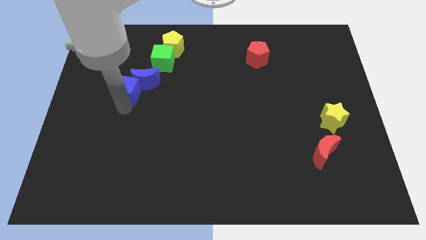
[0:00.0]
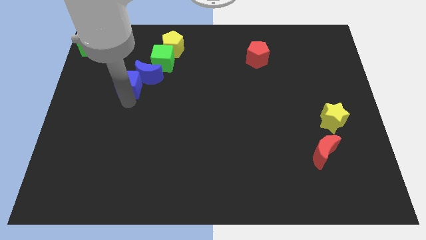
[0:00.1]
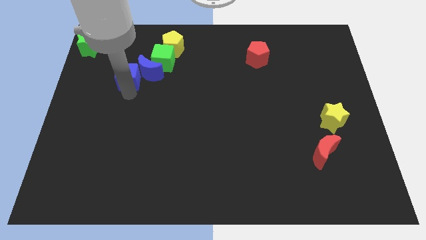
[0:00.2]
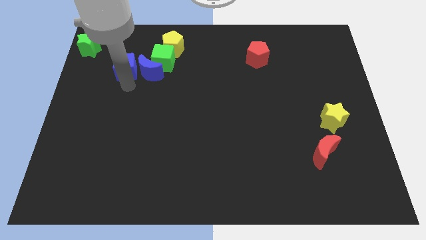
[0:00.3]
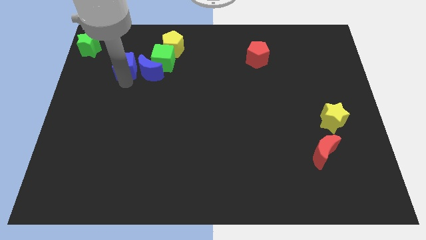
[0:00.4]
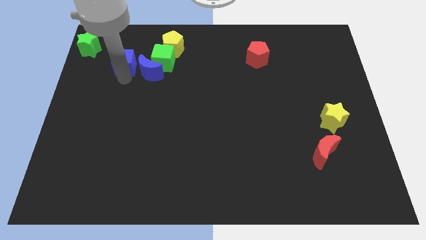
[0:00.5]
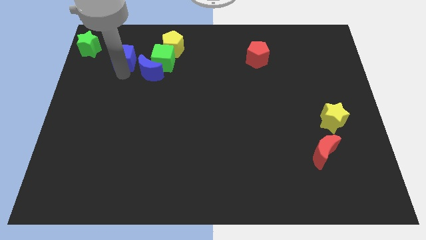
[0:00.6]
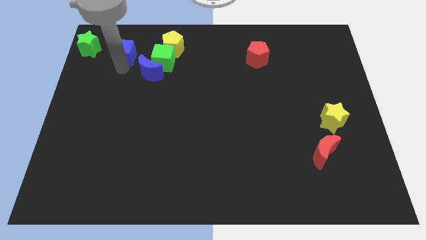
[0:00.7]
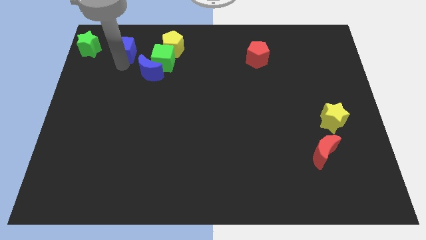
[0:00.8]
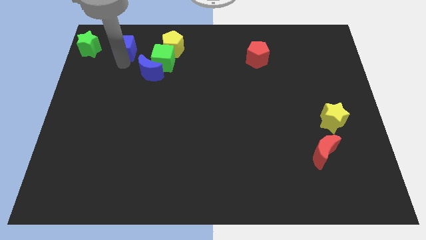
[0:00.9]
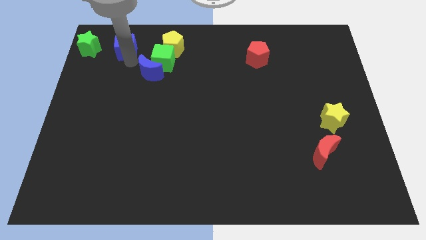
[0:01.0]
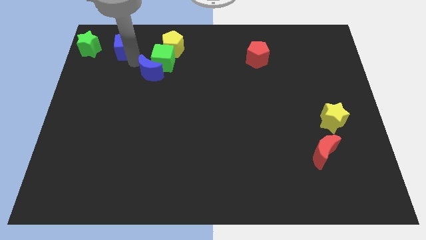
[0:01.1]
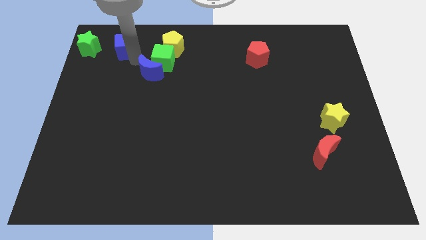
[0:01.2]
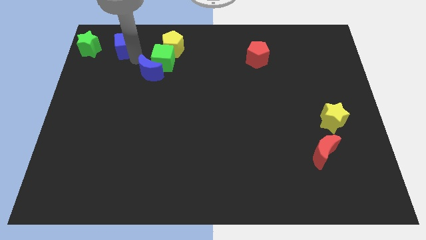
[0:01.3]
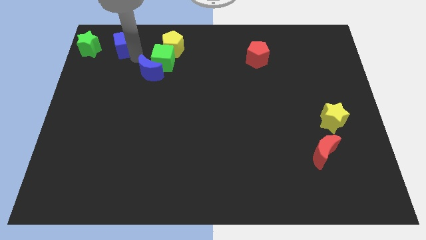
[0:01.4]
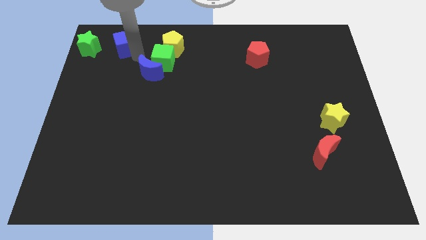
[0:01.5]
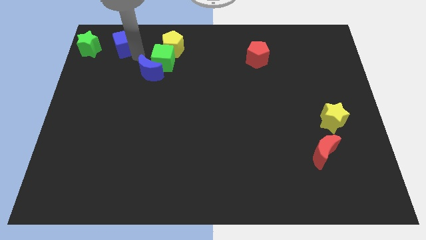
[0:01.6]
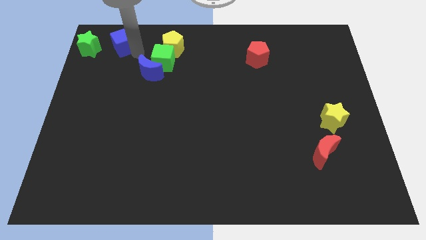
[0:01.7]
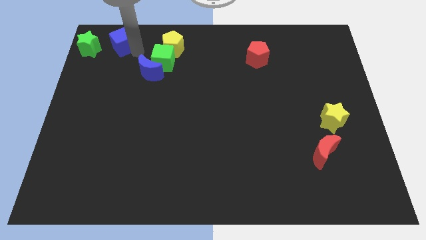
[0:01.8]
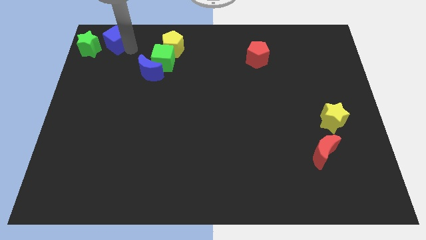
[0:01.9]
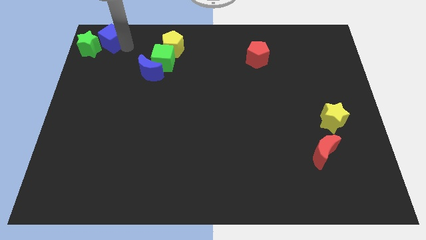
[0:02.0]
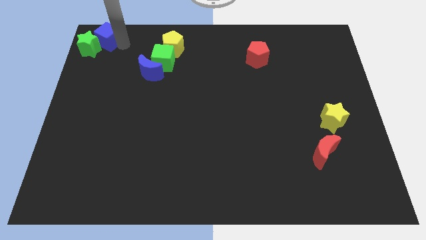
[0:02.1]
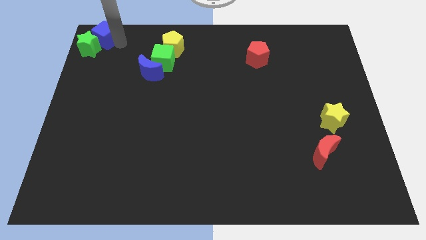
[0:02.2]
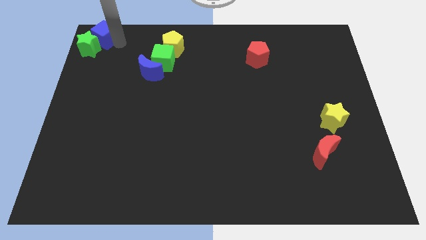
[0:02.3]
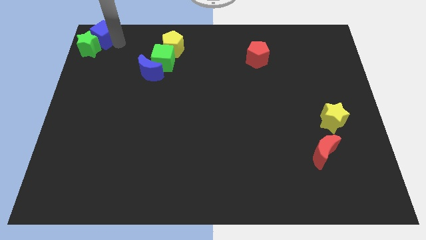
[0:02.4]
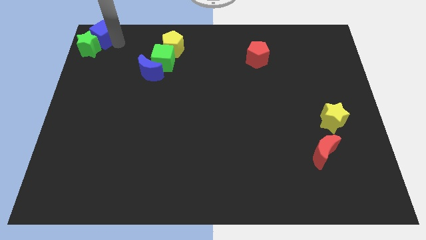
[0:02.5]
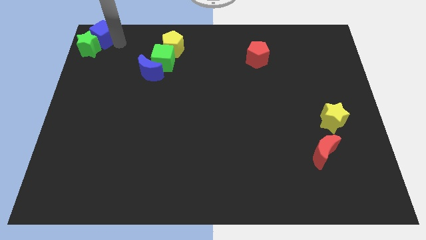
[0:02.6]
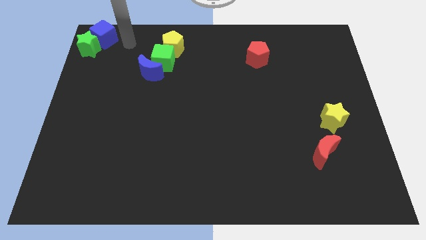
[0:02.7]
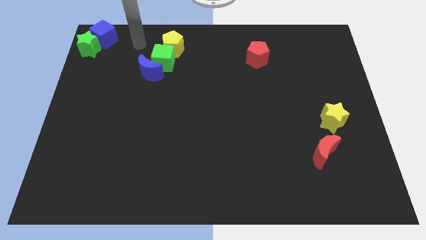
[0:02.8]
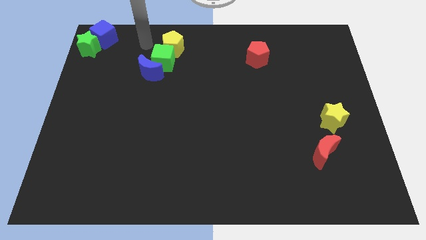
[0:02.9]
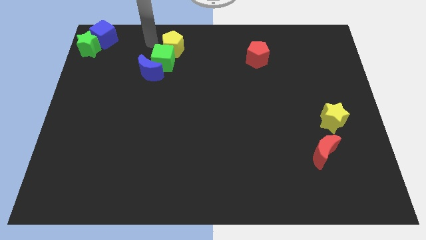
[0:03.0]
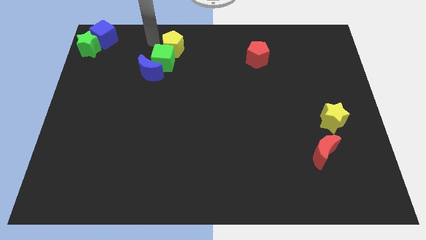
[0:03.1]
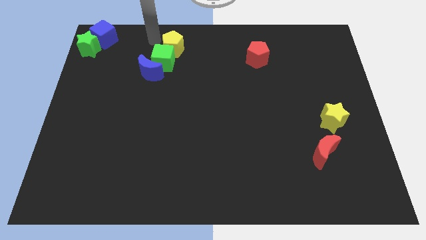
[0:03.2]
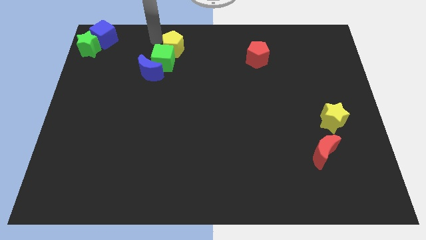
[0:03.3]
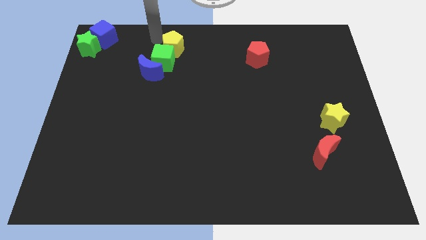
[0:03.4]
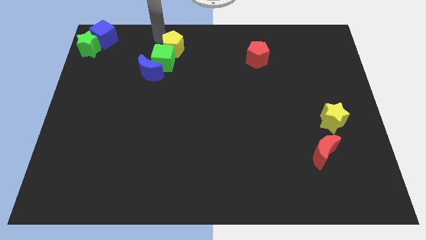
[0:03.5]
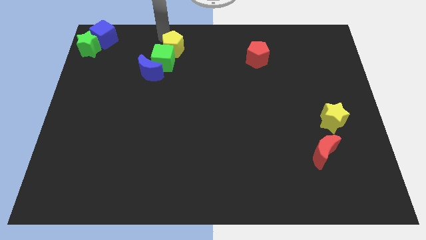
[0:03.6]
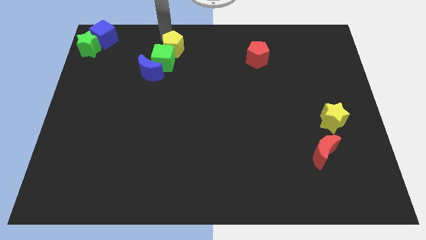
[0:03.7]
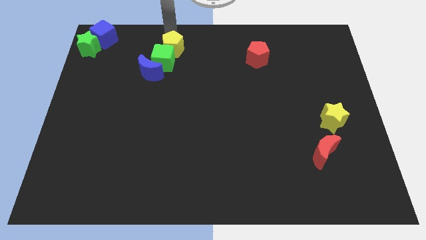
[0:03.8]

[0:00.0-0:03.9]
move the blue cube to the top left corner

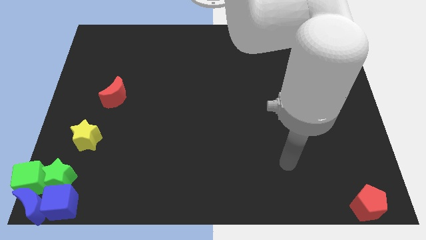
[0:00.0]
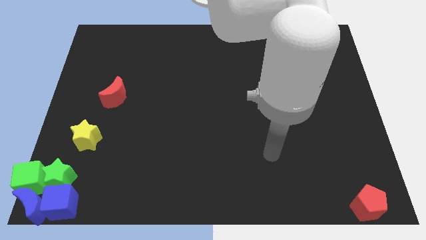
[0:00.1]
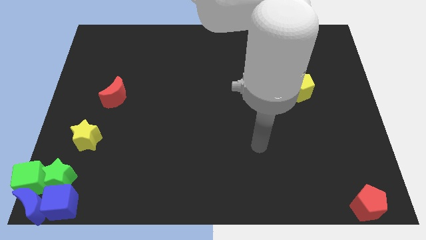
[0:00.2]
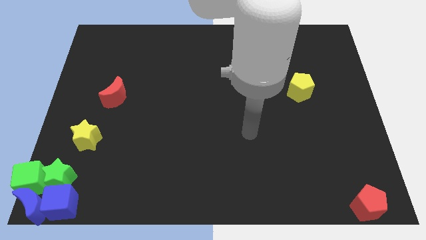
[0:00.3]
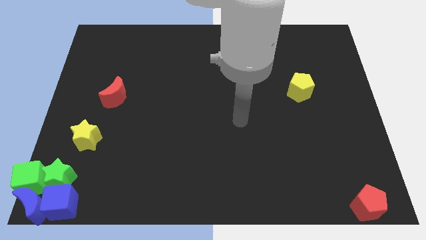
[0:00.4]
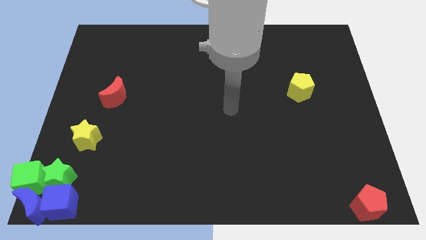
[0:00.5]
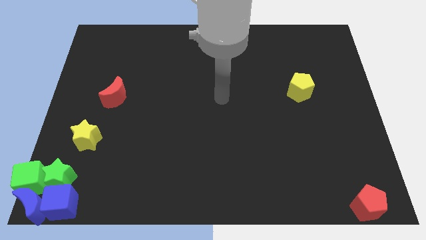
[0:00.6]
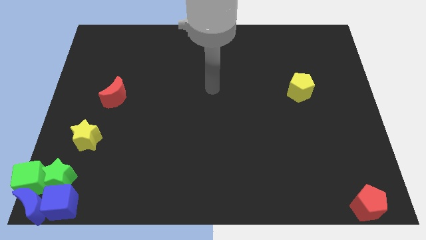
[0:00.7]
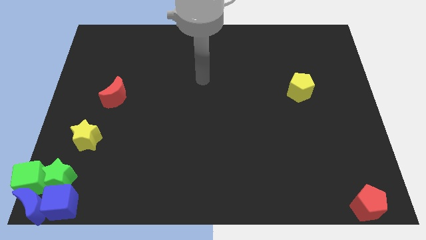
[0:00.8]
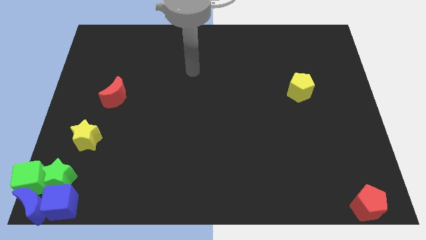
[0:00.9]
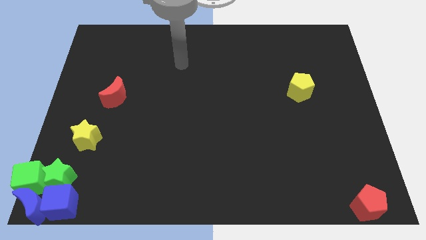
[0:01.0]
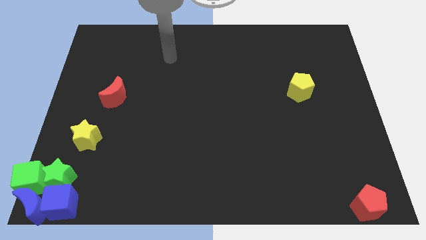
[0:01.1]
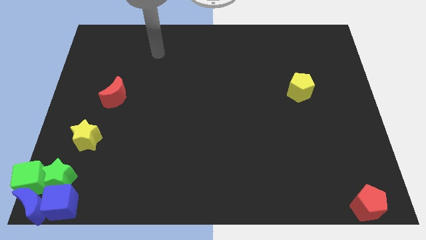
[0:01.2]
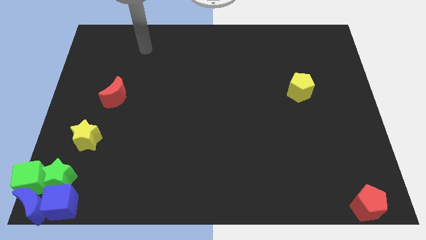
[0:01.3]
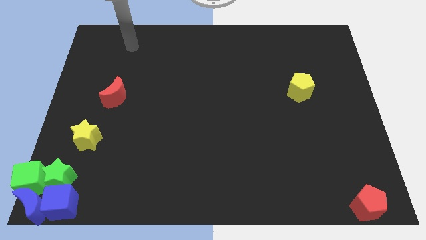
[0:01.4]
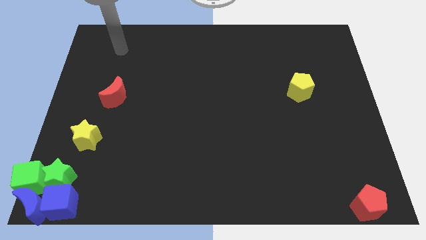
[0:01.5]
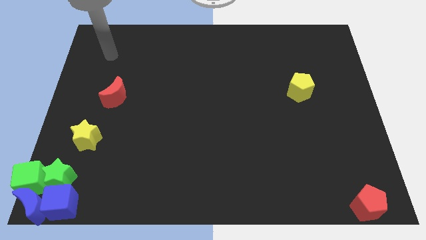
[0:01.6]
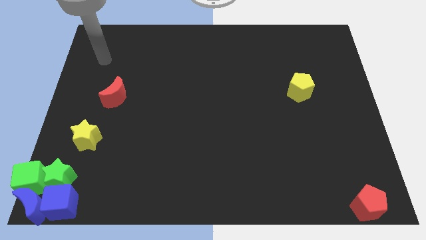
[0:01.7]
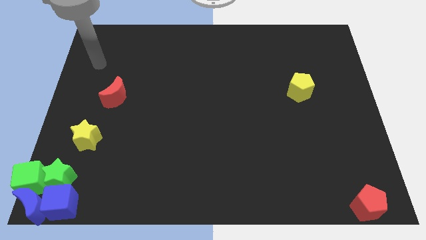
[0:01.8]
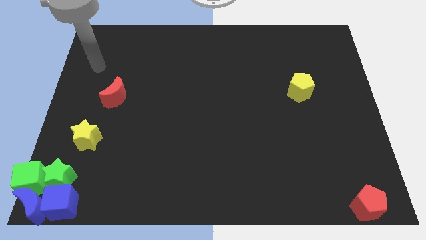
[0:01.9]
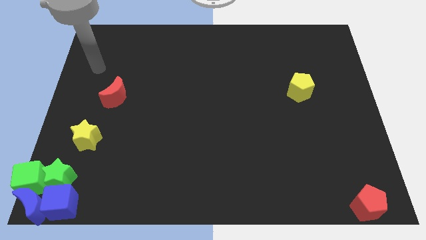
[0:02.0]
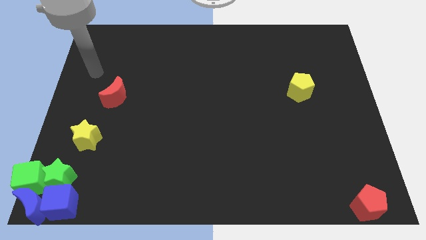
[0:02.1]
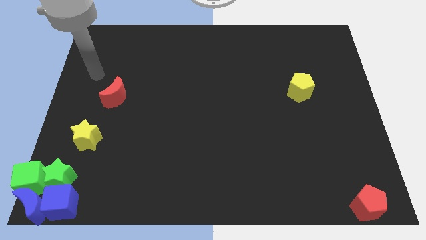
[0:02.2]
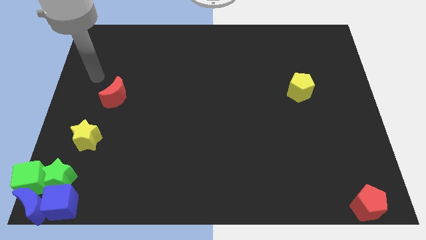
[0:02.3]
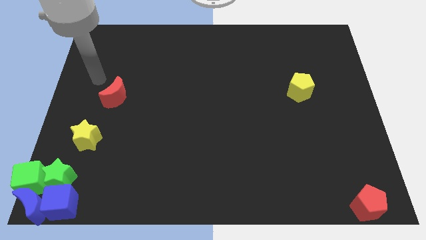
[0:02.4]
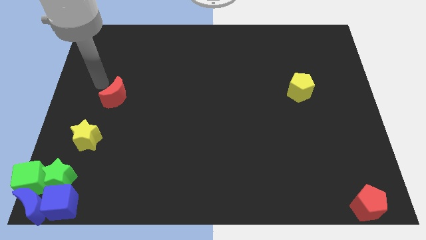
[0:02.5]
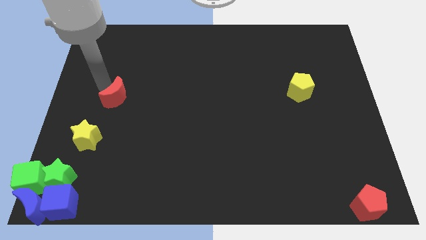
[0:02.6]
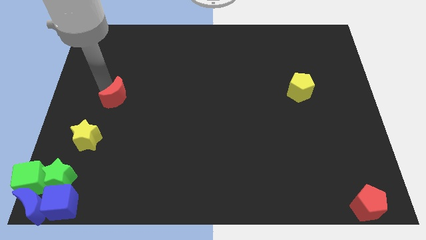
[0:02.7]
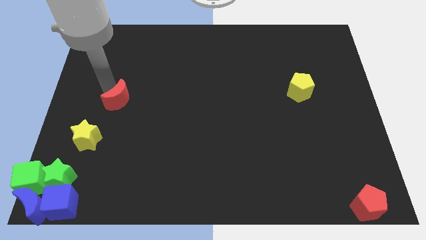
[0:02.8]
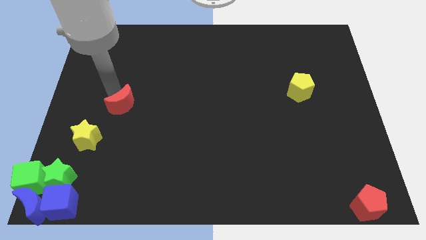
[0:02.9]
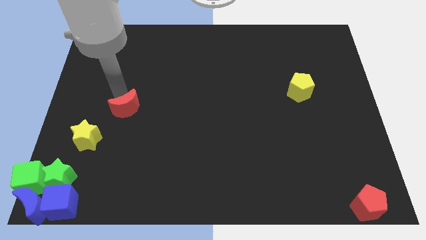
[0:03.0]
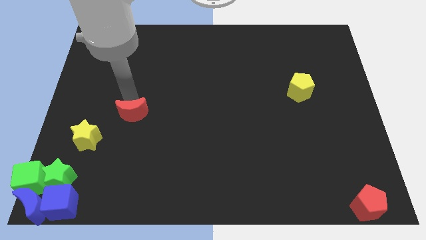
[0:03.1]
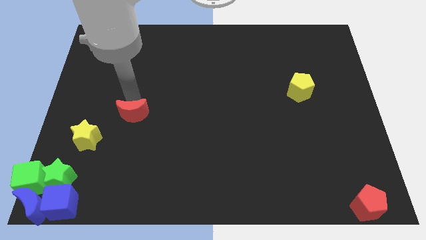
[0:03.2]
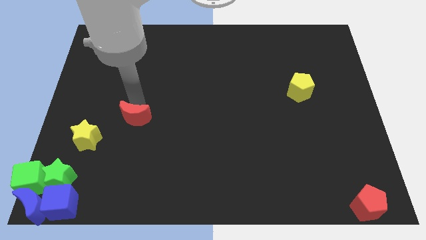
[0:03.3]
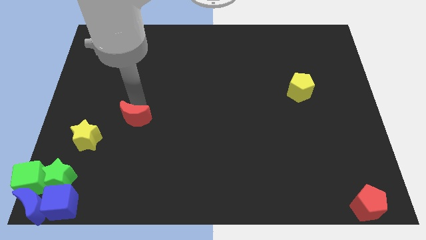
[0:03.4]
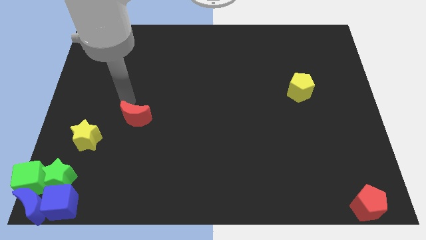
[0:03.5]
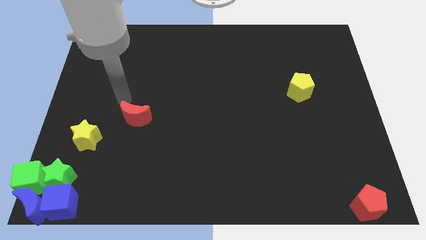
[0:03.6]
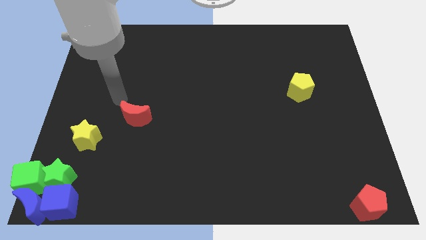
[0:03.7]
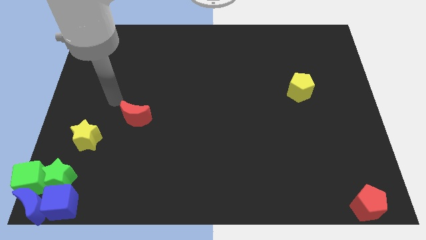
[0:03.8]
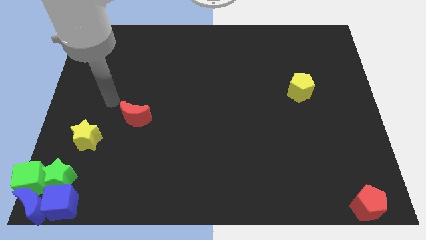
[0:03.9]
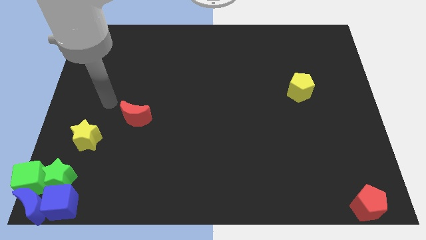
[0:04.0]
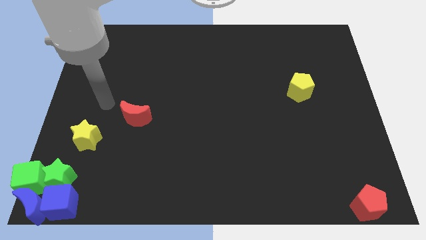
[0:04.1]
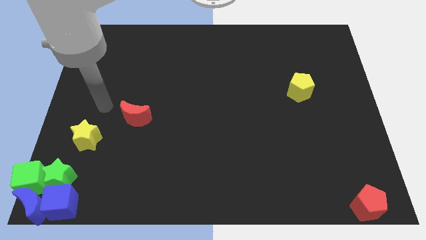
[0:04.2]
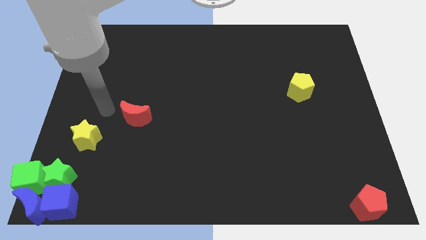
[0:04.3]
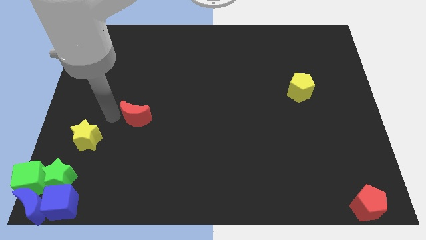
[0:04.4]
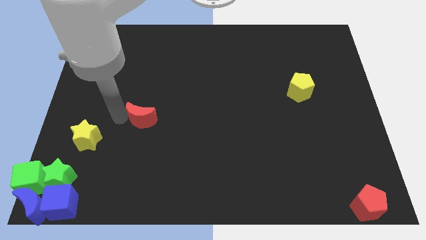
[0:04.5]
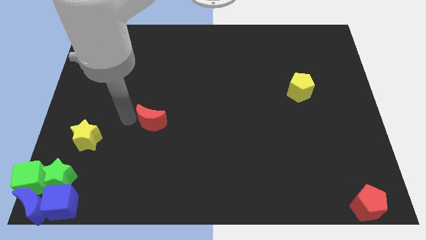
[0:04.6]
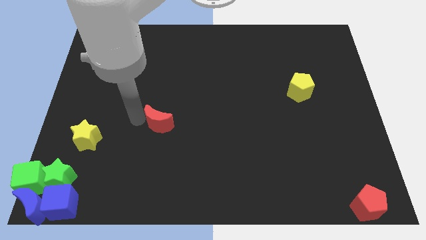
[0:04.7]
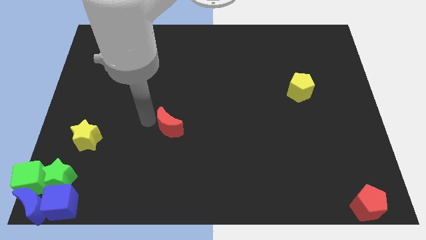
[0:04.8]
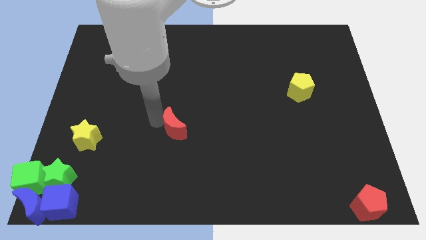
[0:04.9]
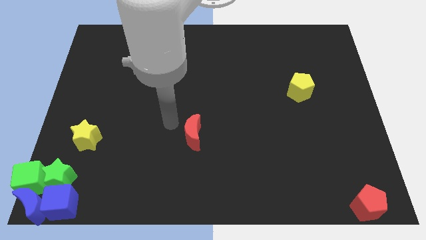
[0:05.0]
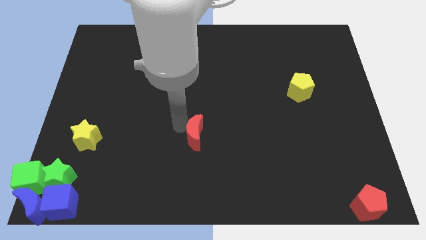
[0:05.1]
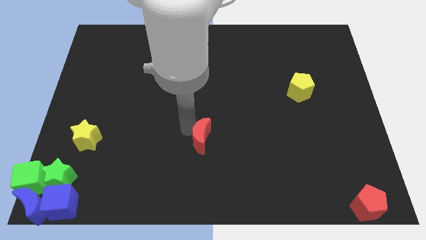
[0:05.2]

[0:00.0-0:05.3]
push the red crescent to the center of the board
